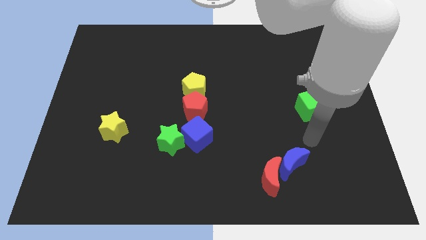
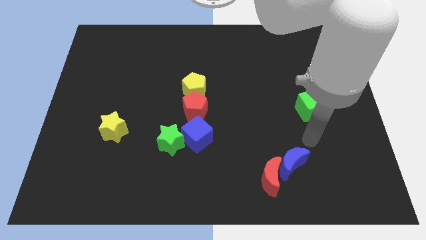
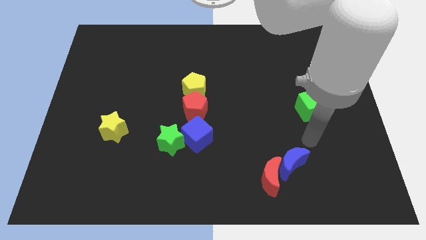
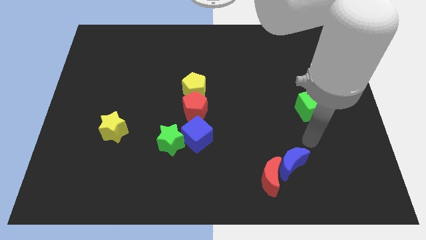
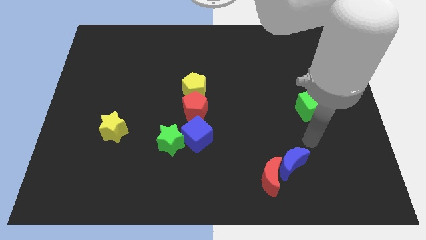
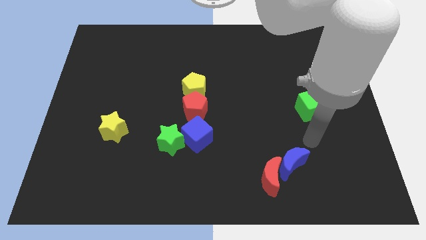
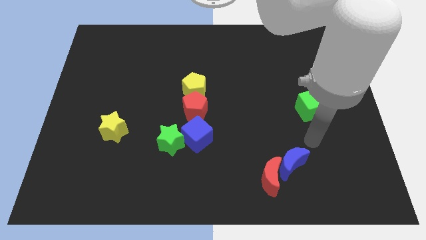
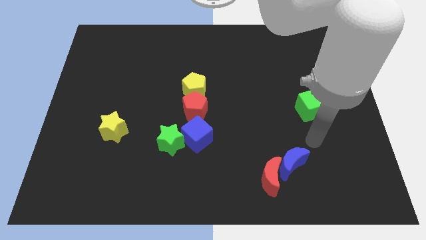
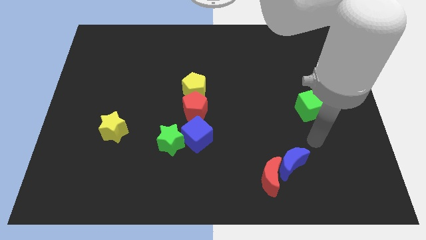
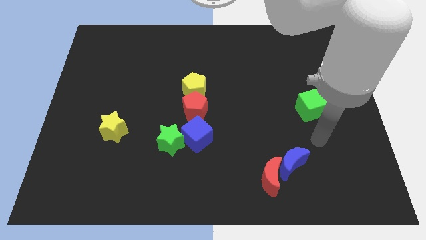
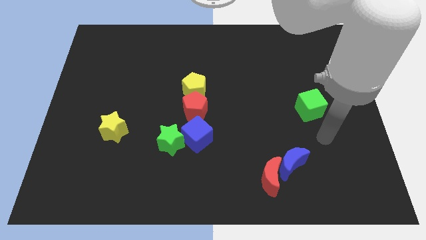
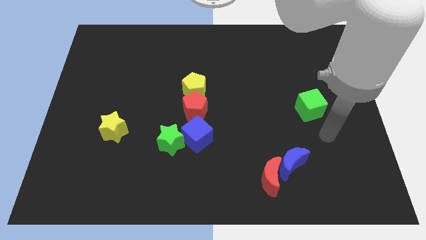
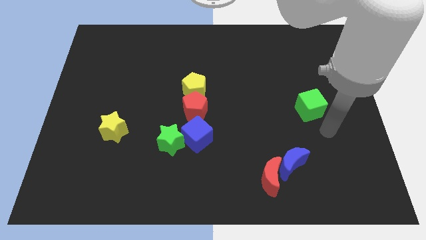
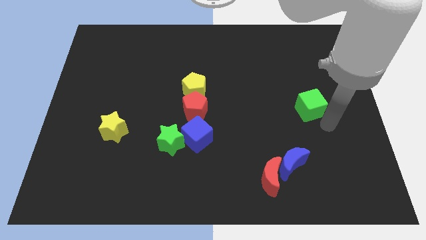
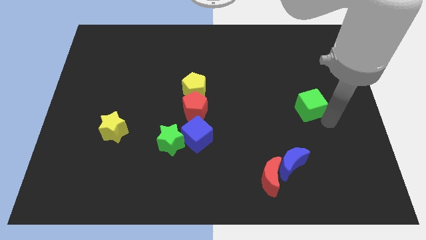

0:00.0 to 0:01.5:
move your arm to the bottom left of the green cube

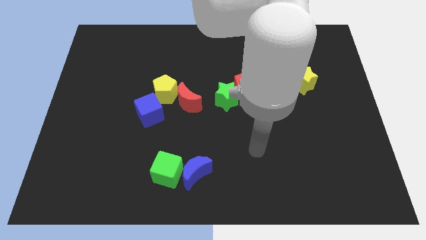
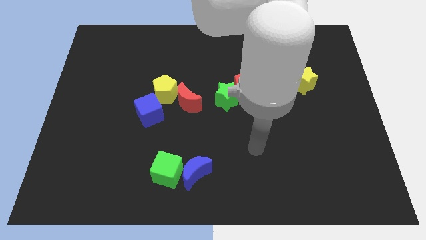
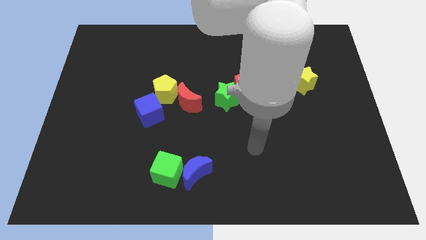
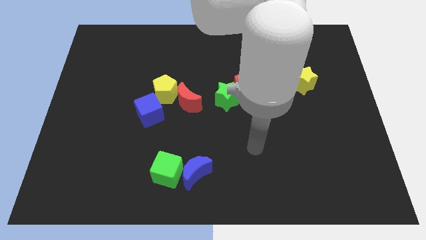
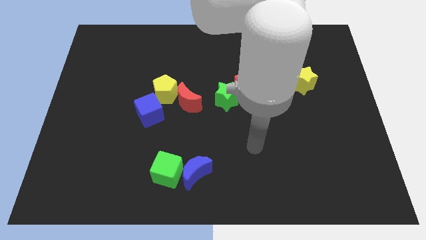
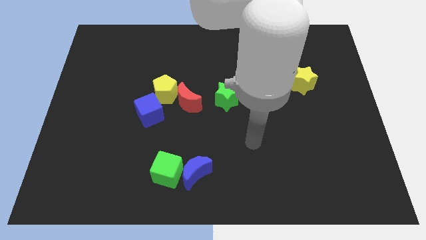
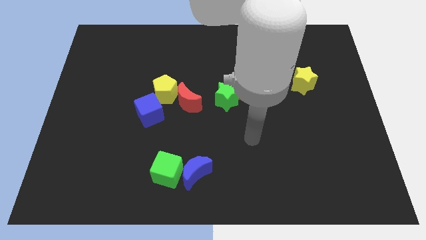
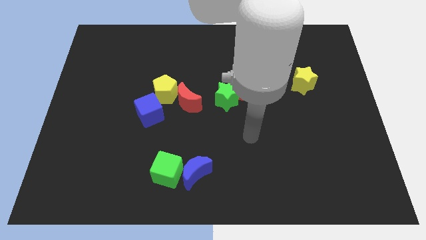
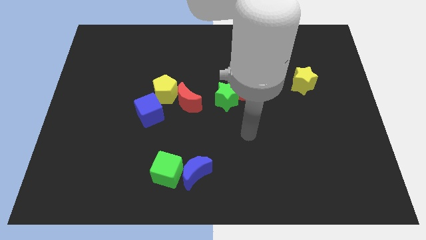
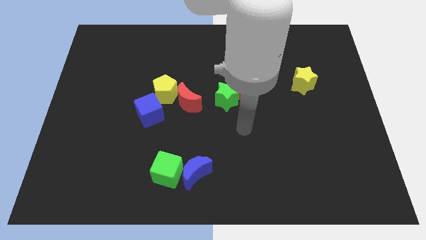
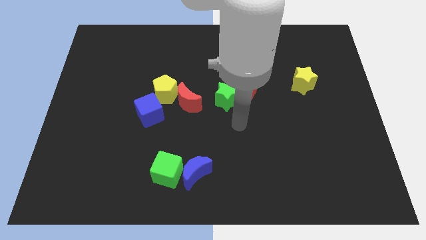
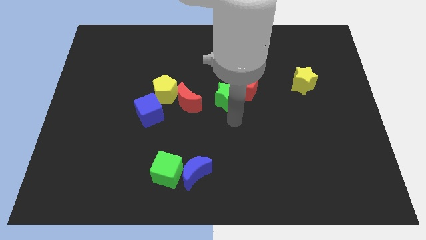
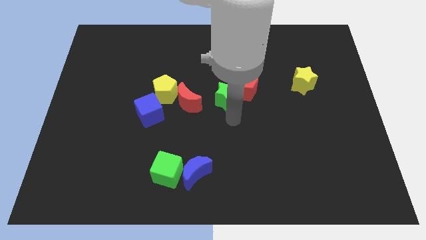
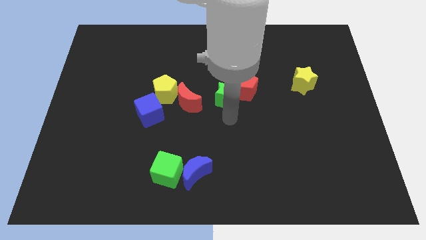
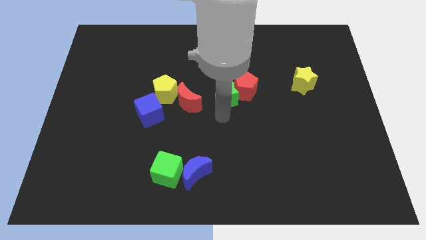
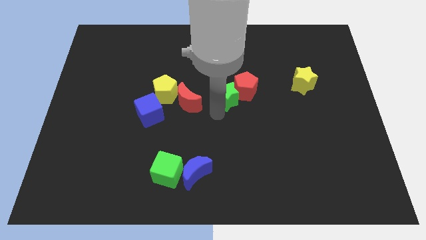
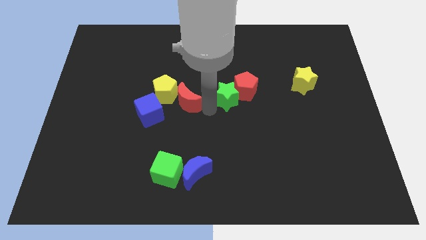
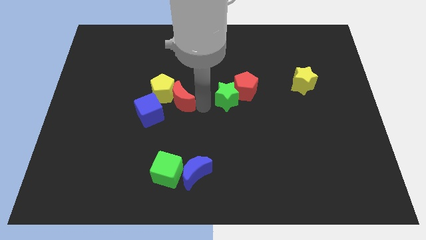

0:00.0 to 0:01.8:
place the arm beside the red moon

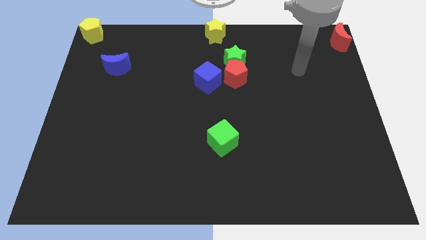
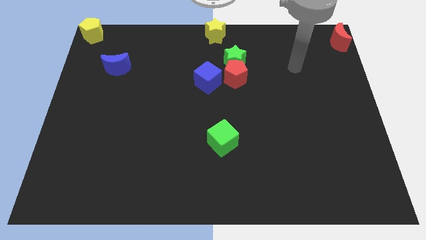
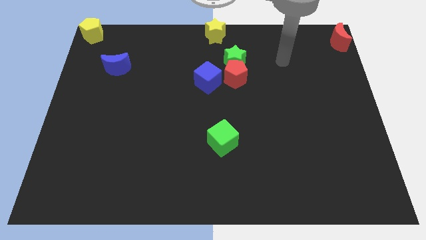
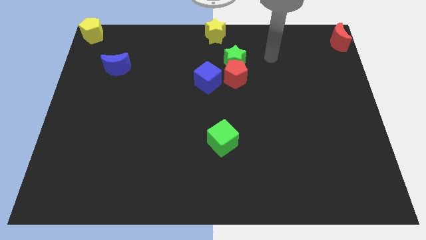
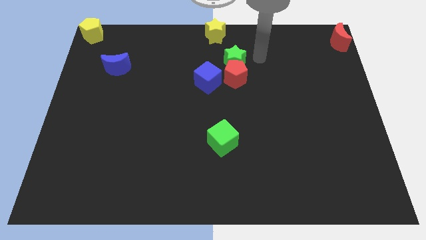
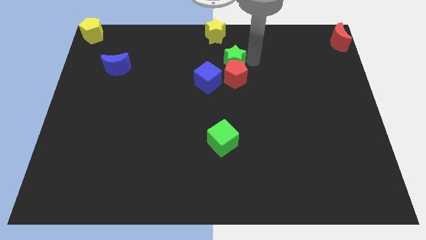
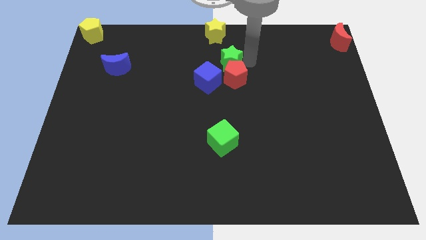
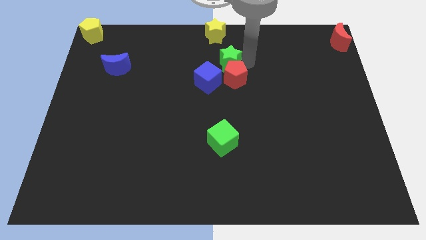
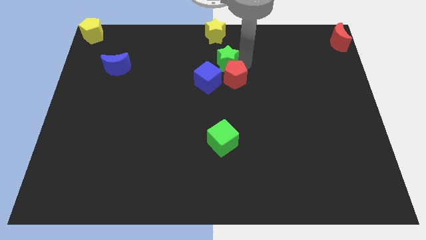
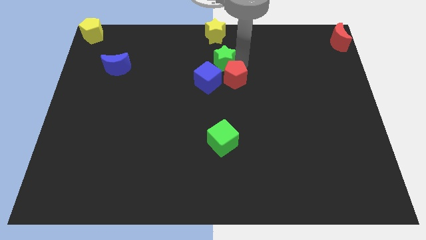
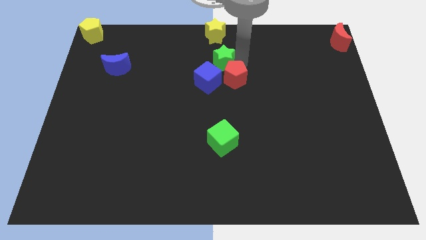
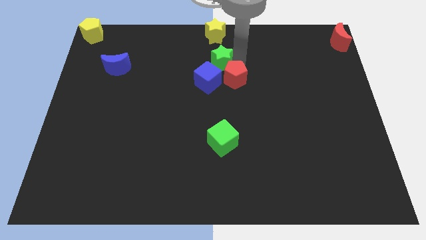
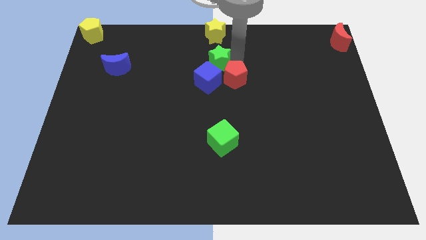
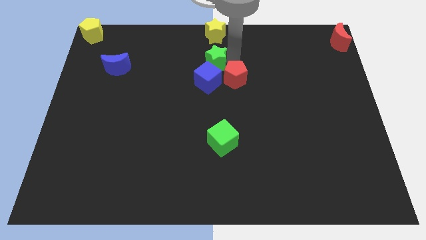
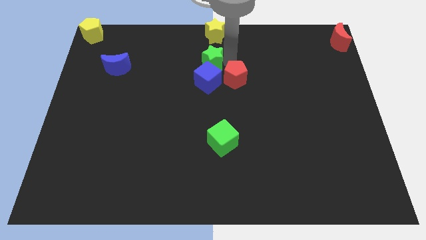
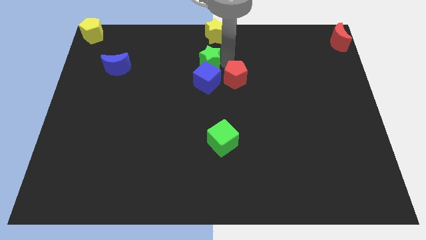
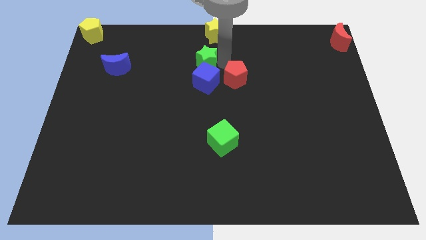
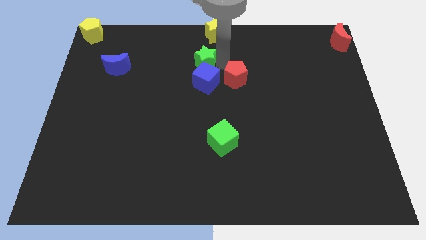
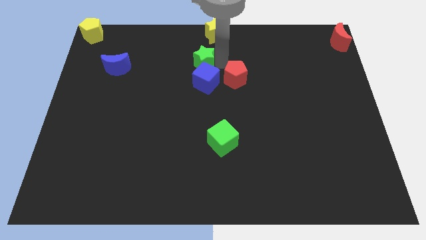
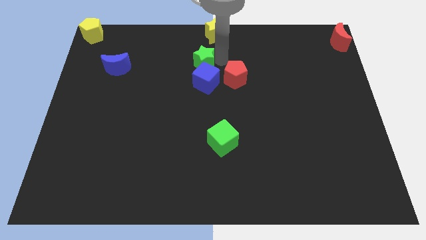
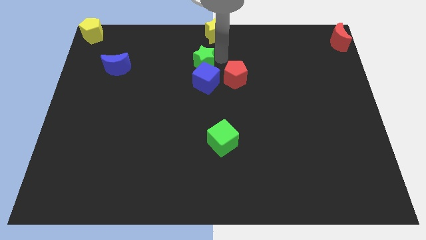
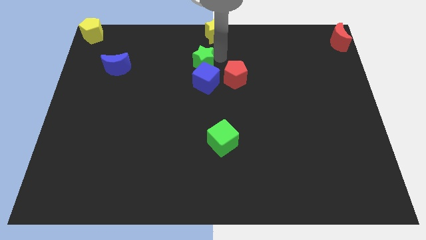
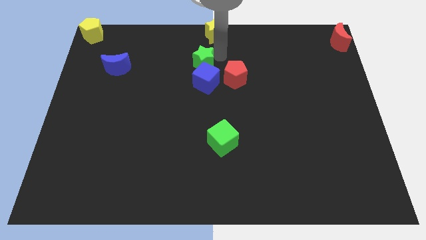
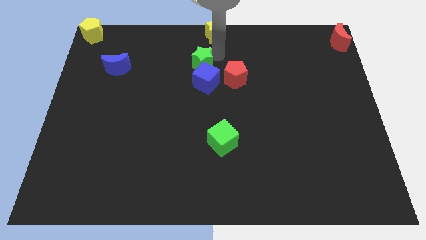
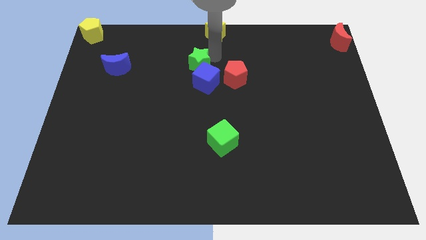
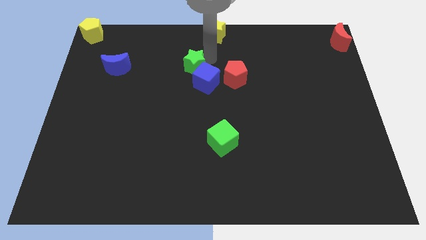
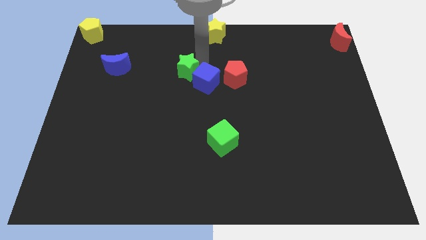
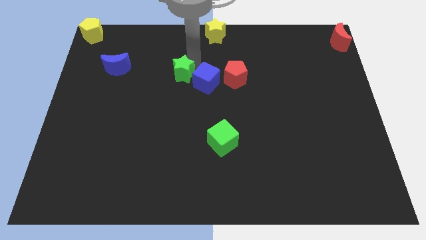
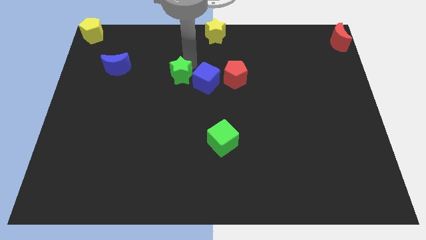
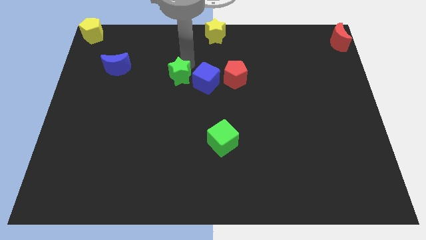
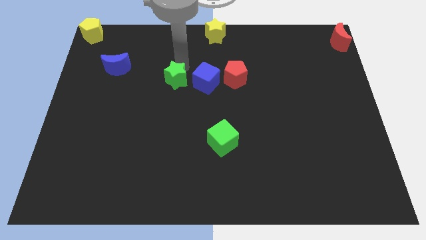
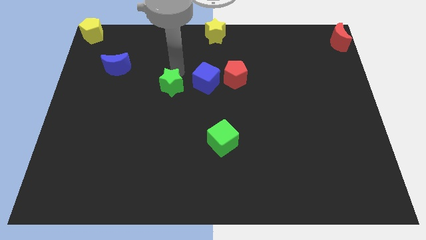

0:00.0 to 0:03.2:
place the green star to the left side of blue cube

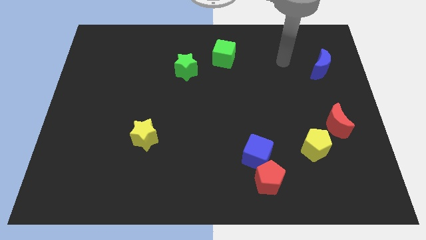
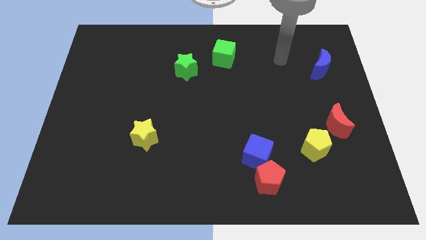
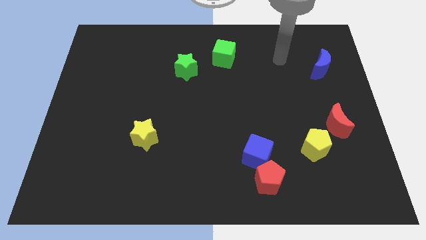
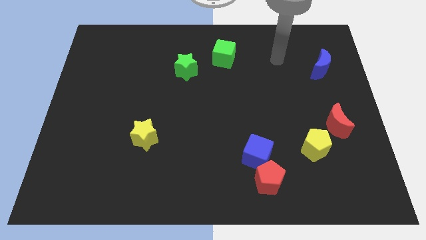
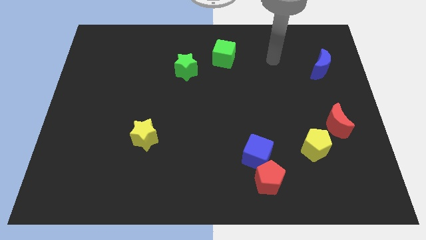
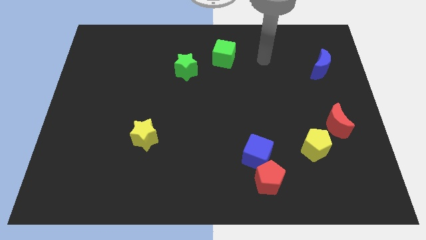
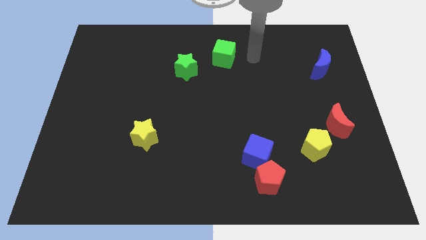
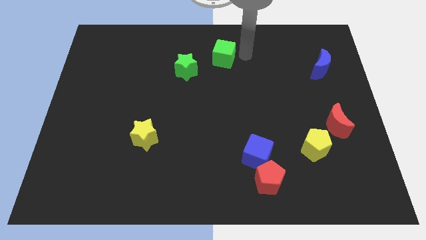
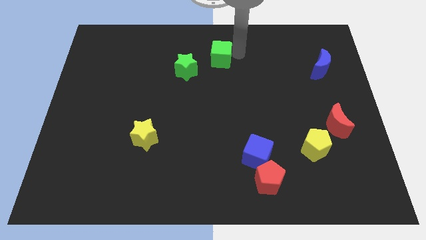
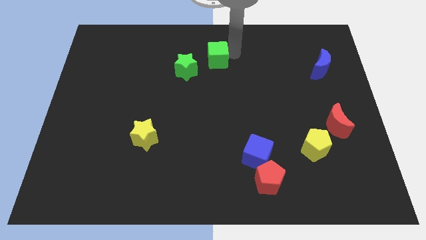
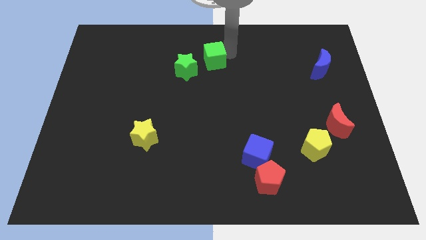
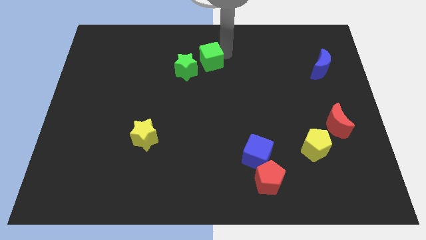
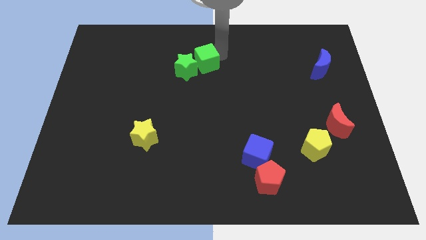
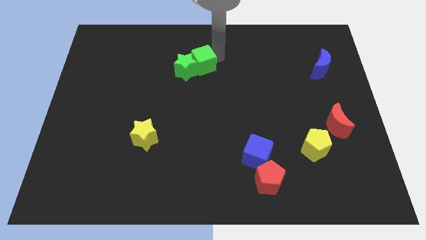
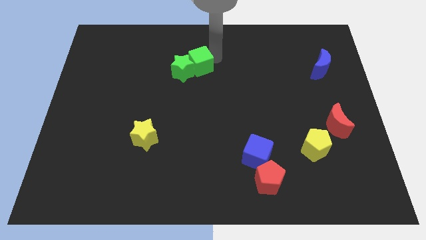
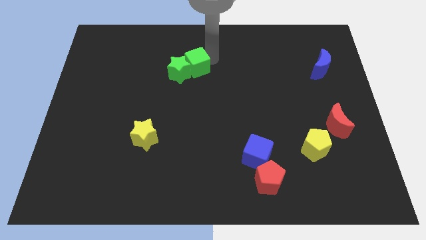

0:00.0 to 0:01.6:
move the green cube to the right of green star

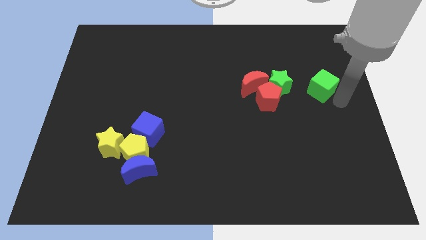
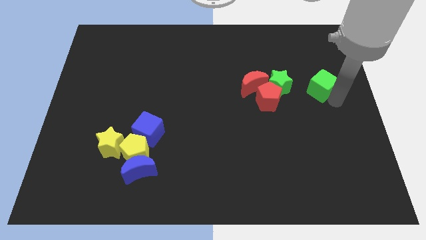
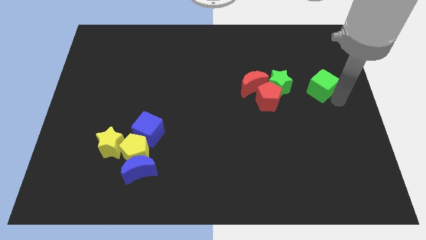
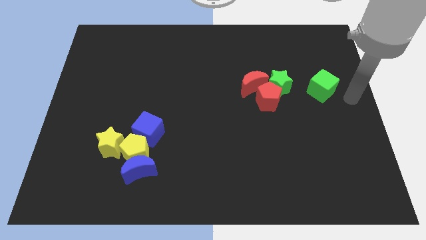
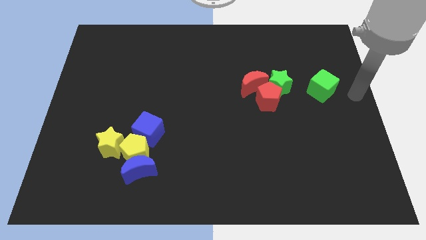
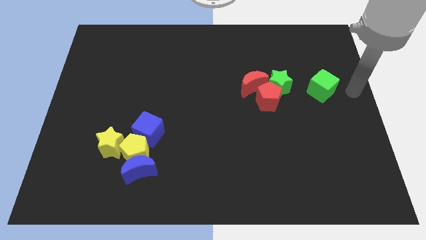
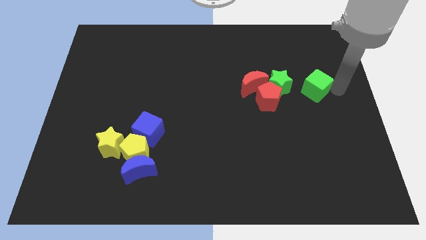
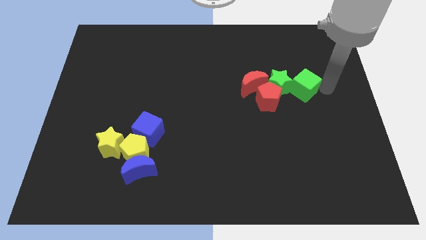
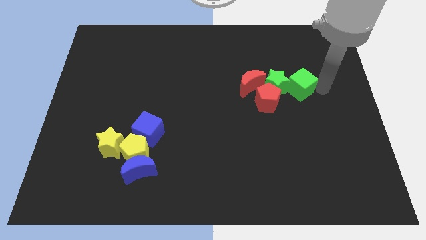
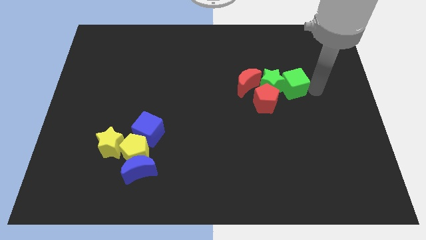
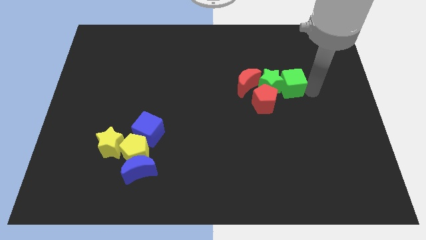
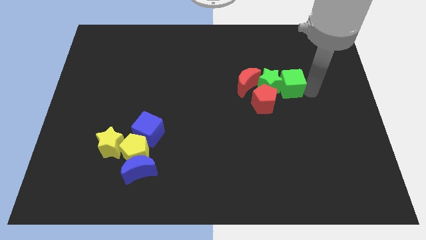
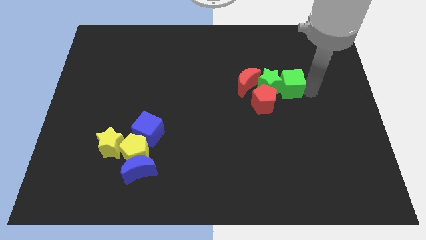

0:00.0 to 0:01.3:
place the green cube to the right of green star
